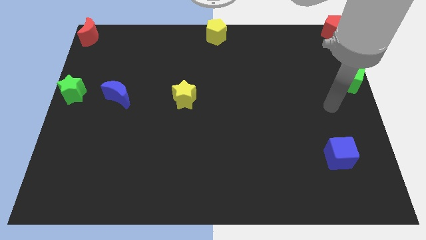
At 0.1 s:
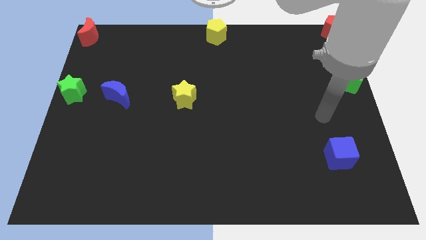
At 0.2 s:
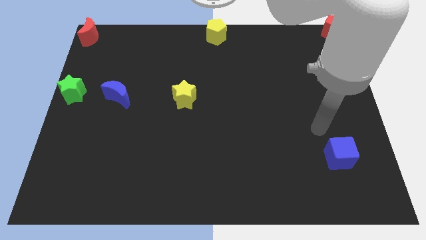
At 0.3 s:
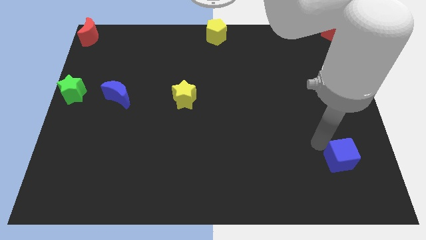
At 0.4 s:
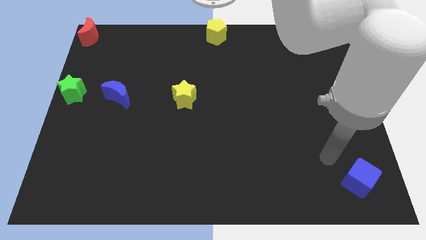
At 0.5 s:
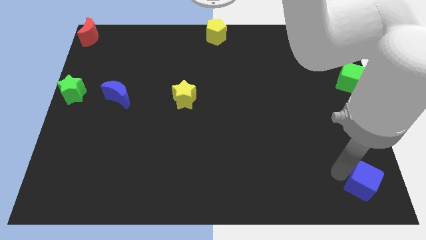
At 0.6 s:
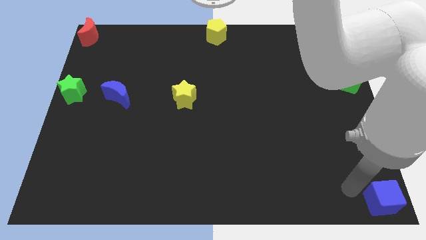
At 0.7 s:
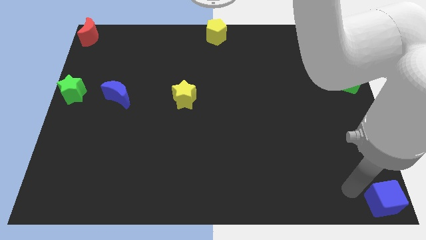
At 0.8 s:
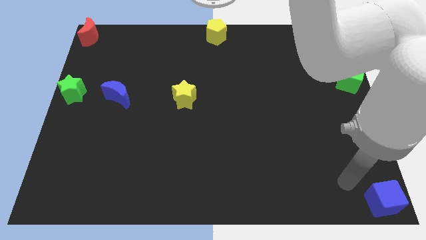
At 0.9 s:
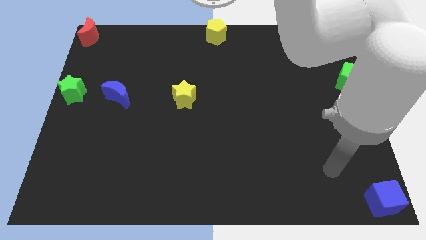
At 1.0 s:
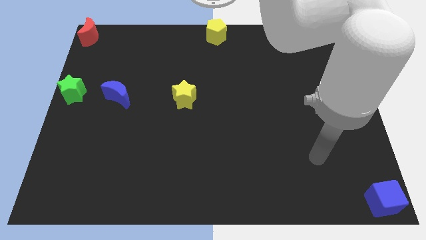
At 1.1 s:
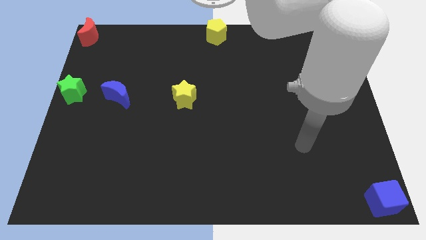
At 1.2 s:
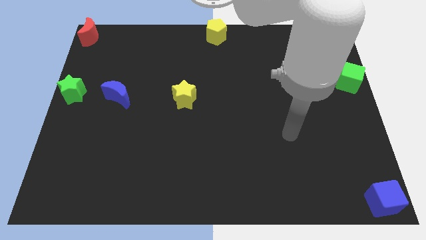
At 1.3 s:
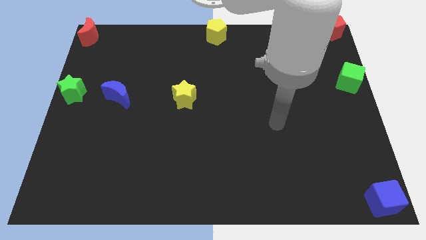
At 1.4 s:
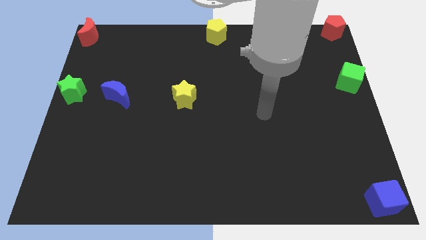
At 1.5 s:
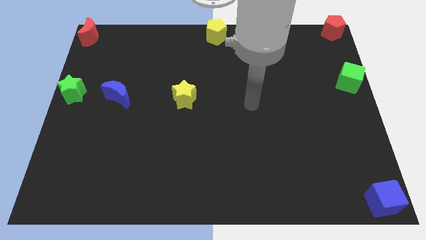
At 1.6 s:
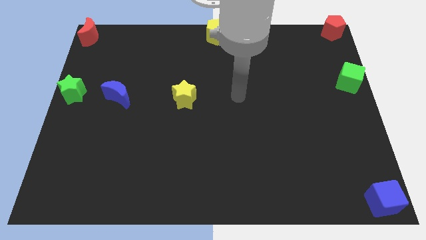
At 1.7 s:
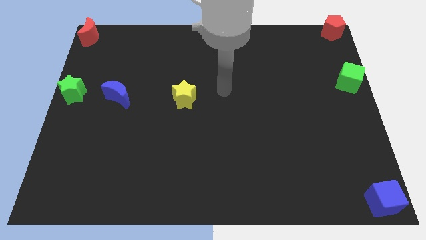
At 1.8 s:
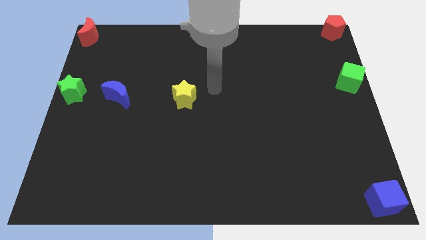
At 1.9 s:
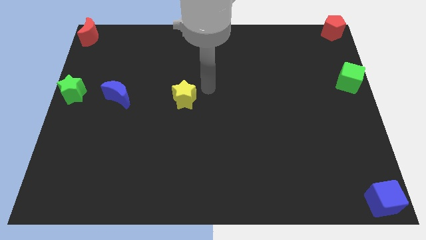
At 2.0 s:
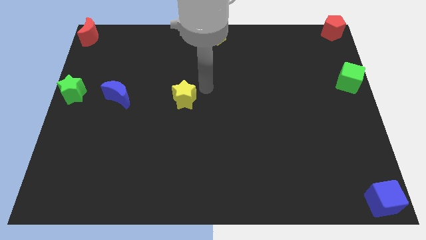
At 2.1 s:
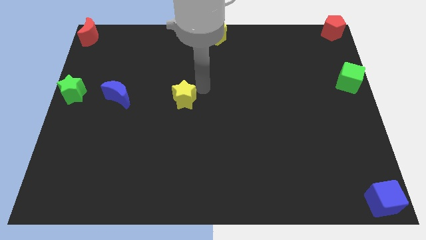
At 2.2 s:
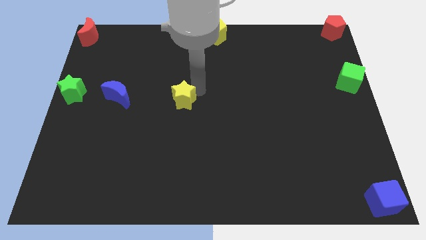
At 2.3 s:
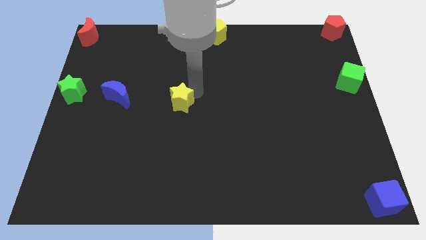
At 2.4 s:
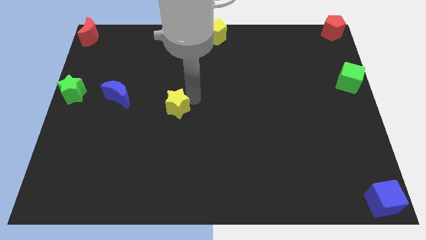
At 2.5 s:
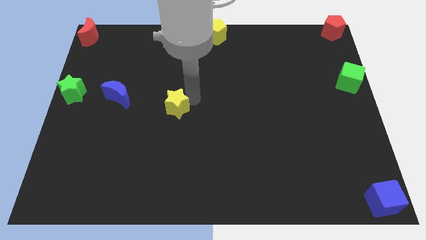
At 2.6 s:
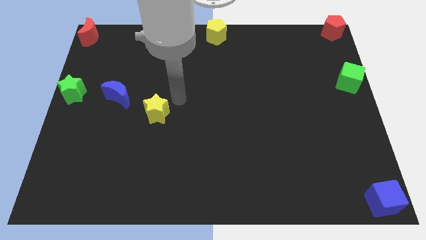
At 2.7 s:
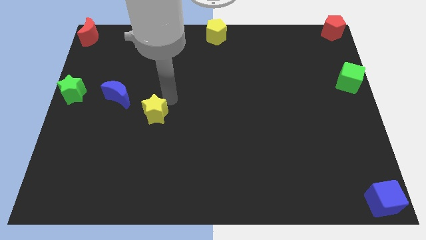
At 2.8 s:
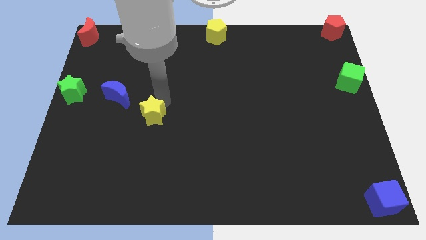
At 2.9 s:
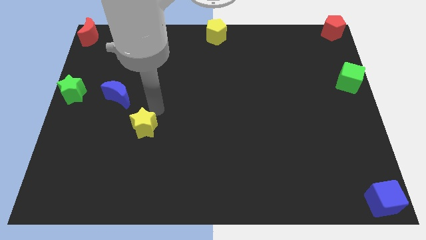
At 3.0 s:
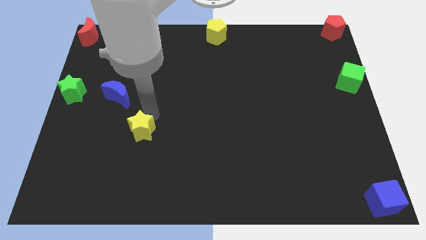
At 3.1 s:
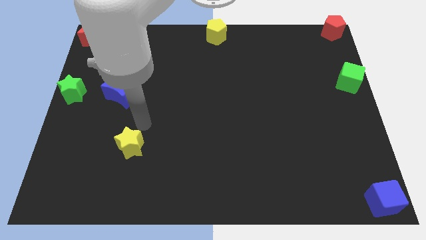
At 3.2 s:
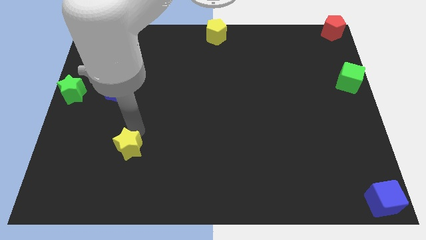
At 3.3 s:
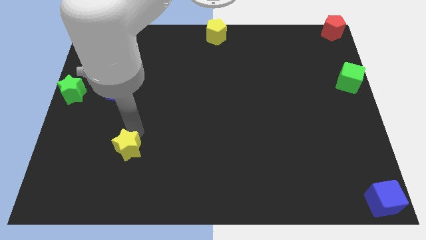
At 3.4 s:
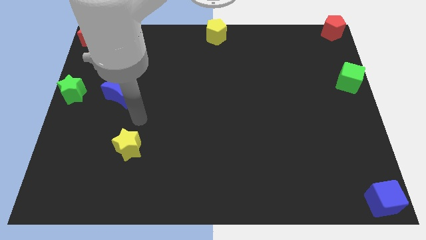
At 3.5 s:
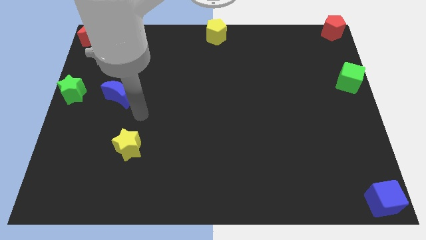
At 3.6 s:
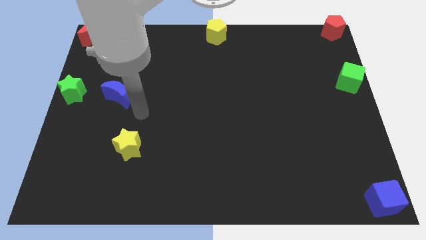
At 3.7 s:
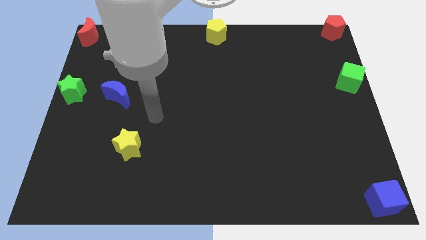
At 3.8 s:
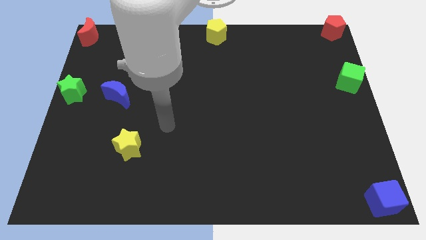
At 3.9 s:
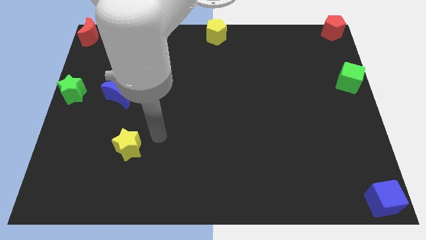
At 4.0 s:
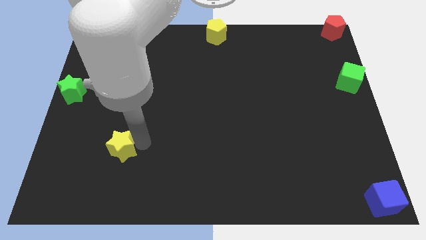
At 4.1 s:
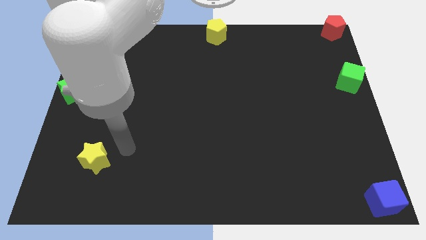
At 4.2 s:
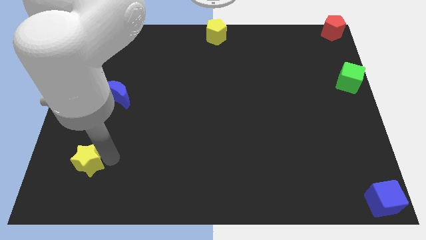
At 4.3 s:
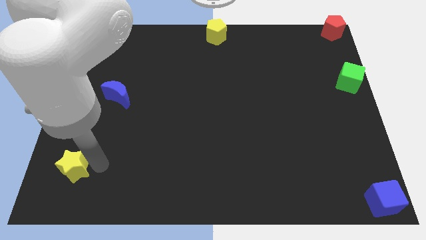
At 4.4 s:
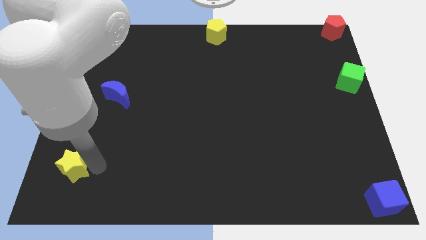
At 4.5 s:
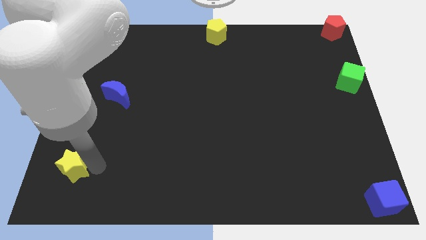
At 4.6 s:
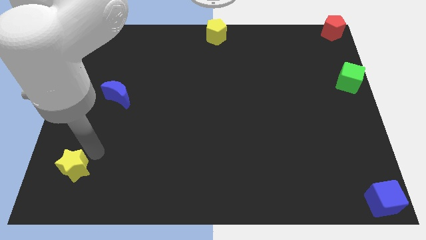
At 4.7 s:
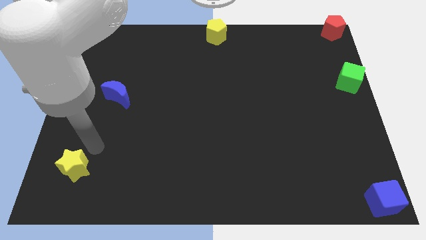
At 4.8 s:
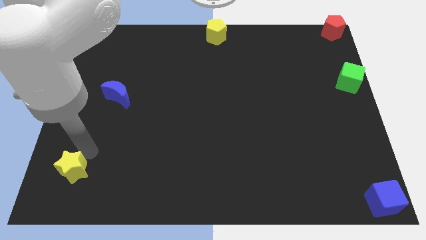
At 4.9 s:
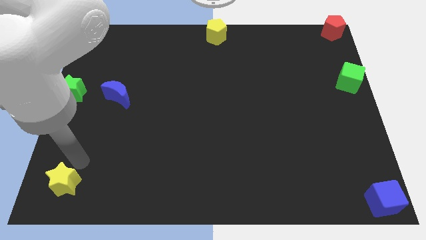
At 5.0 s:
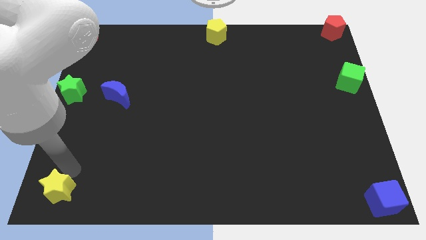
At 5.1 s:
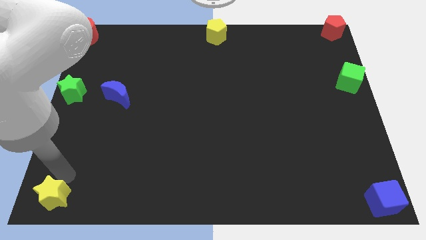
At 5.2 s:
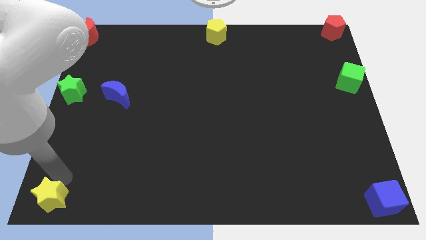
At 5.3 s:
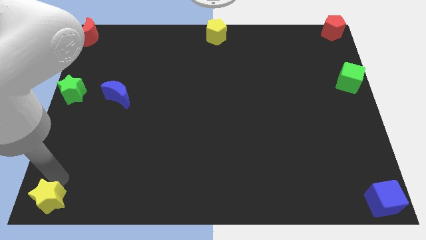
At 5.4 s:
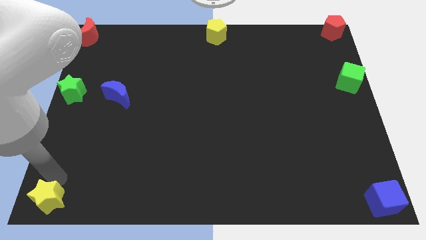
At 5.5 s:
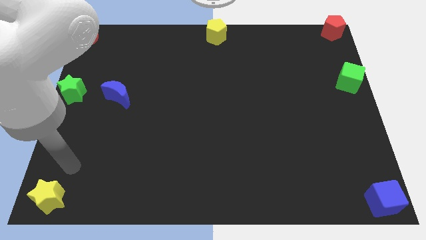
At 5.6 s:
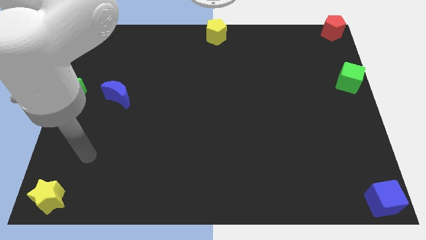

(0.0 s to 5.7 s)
push the blue cube and yellow star in the bottom opposite corners of the board

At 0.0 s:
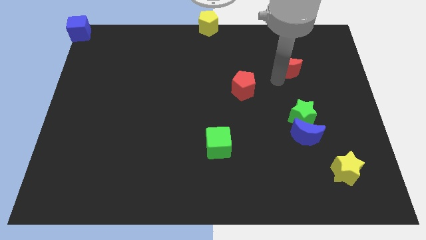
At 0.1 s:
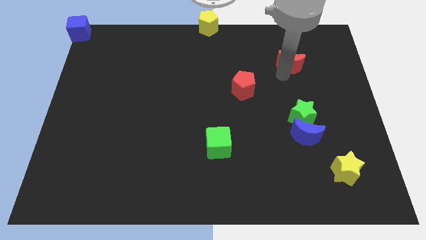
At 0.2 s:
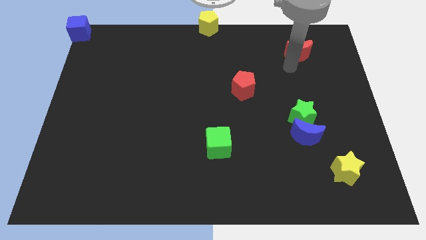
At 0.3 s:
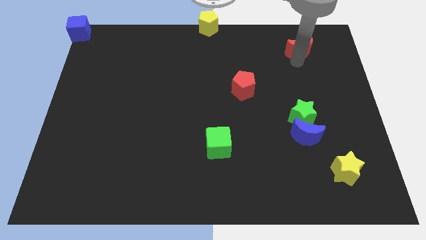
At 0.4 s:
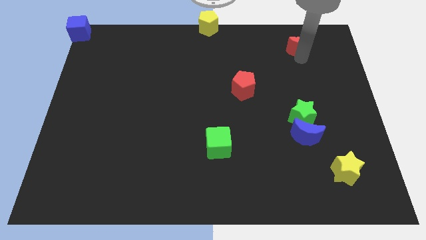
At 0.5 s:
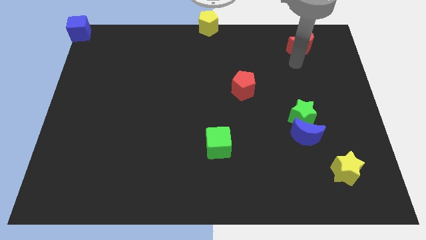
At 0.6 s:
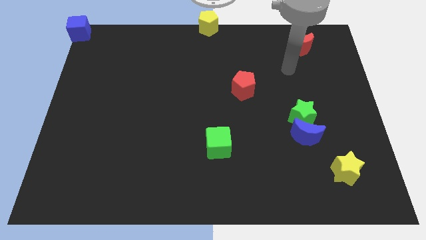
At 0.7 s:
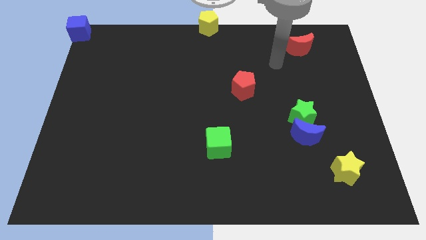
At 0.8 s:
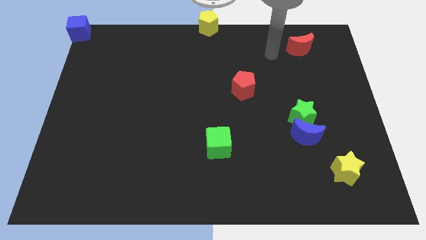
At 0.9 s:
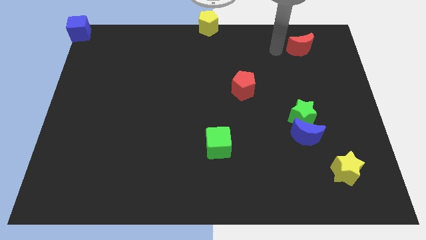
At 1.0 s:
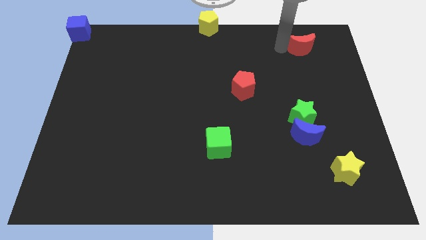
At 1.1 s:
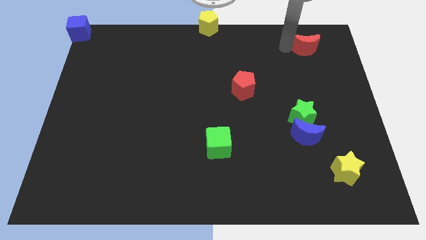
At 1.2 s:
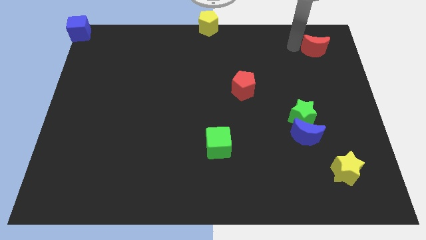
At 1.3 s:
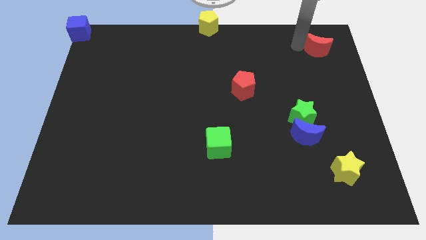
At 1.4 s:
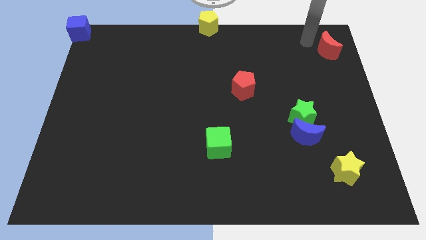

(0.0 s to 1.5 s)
move the red crescent to the top right side of the board

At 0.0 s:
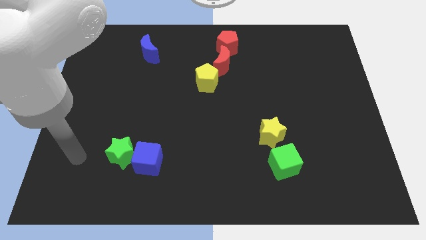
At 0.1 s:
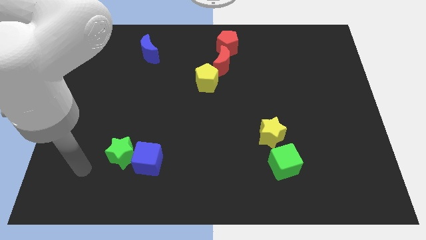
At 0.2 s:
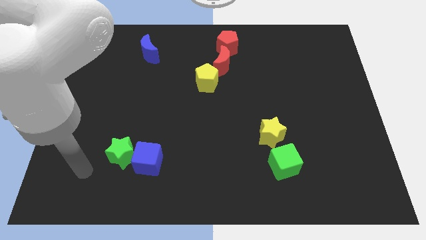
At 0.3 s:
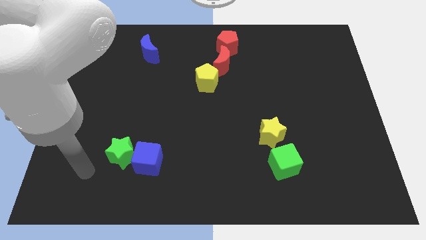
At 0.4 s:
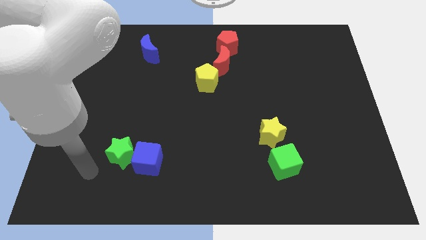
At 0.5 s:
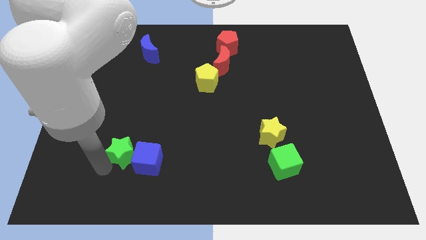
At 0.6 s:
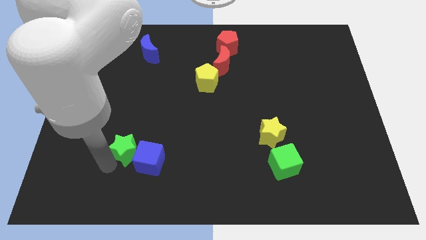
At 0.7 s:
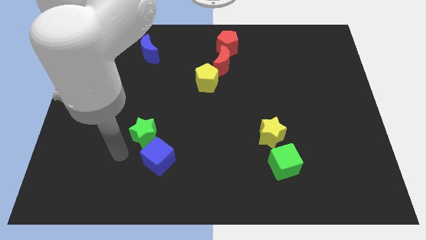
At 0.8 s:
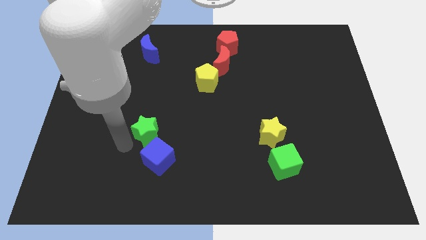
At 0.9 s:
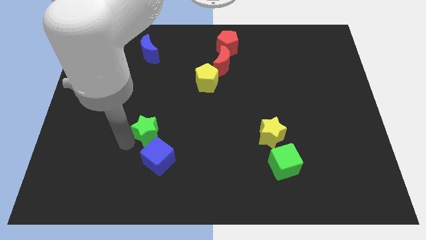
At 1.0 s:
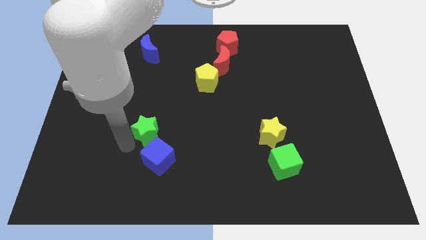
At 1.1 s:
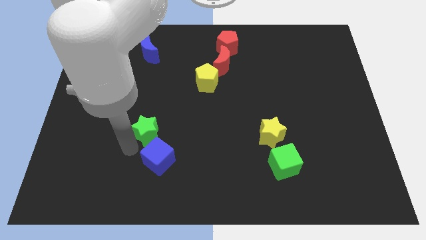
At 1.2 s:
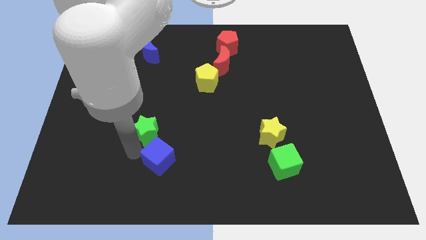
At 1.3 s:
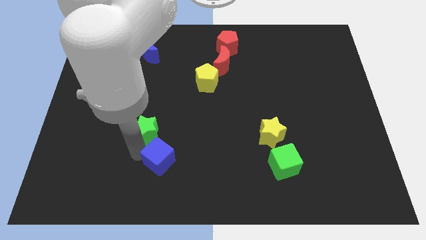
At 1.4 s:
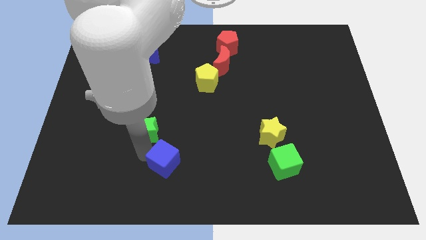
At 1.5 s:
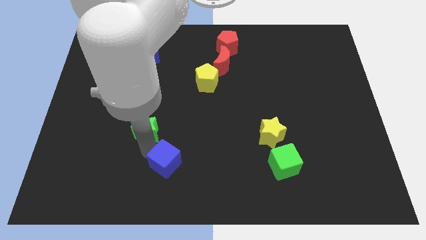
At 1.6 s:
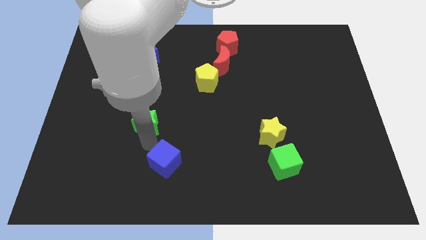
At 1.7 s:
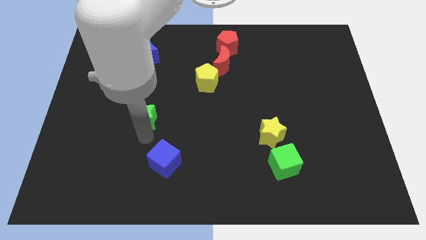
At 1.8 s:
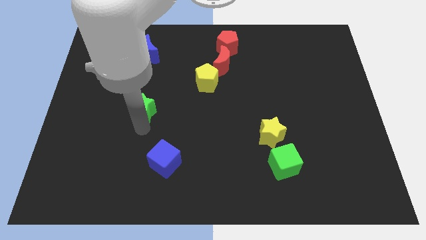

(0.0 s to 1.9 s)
separate green star away from the blue cube
